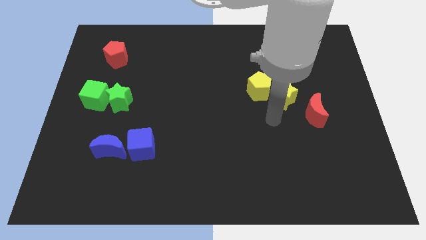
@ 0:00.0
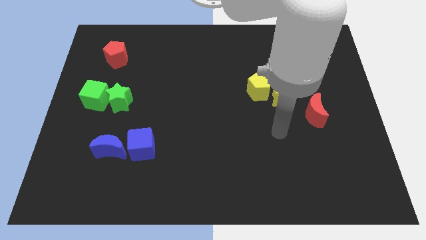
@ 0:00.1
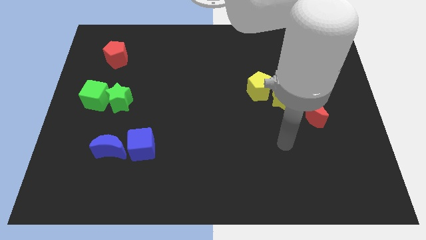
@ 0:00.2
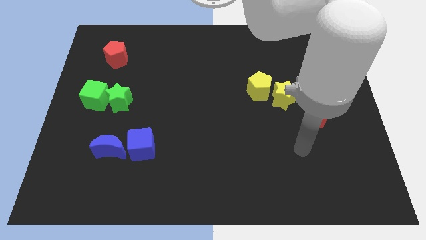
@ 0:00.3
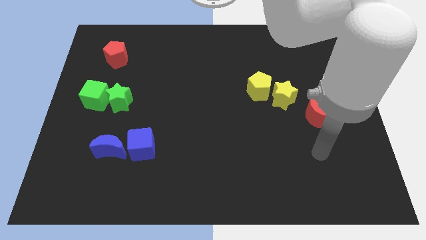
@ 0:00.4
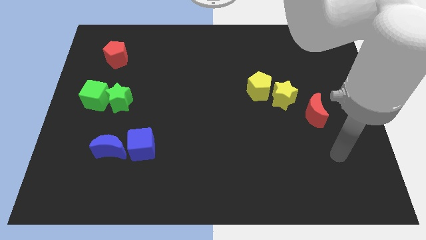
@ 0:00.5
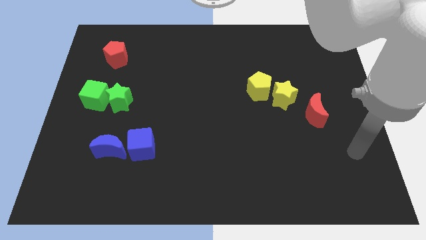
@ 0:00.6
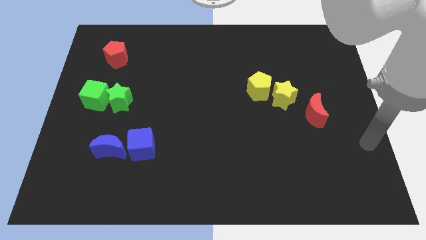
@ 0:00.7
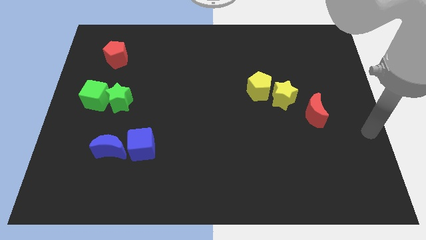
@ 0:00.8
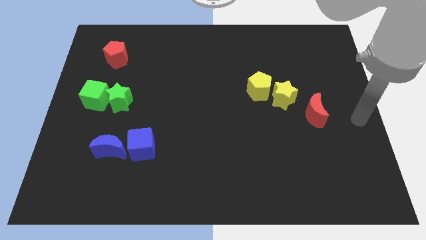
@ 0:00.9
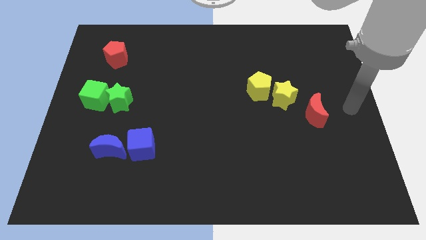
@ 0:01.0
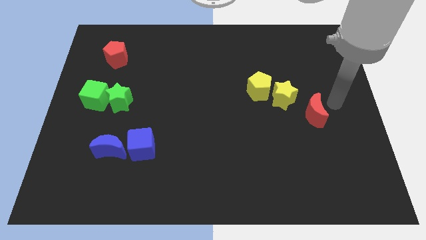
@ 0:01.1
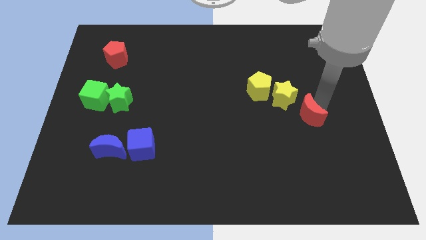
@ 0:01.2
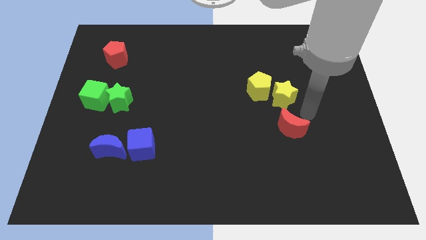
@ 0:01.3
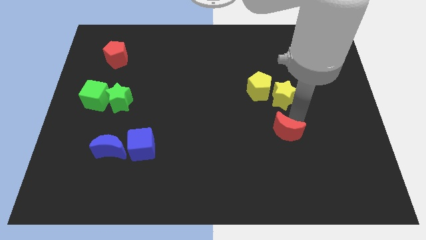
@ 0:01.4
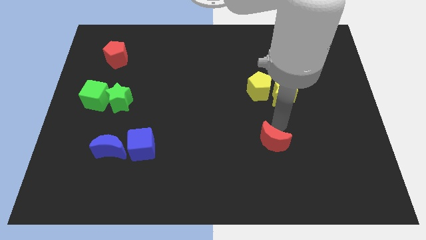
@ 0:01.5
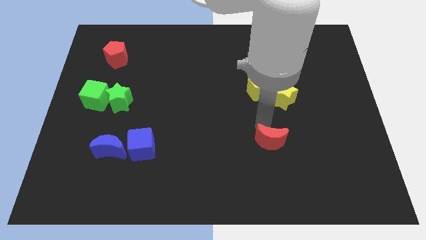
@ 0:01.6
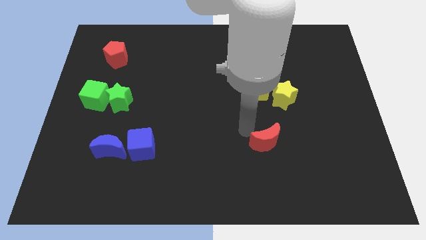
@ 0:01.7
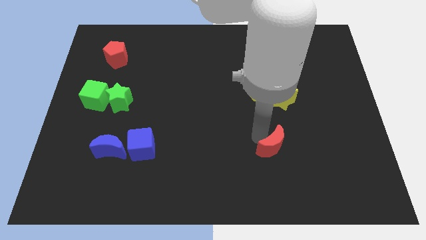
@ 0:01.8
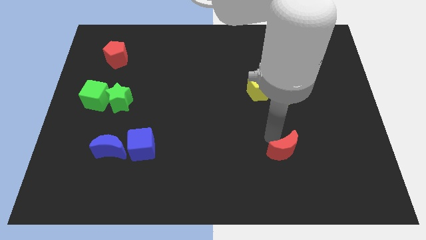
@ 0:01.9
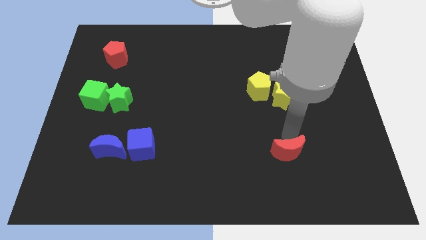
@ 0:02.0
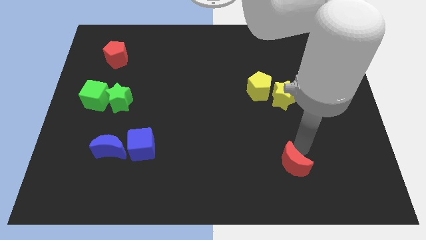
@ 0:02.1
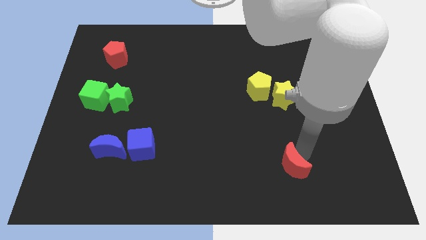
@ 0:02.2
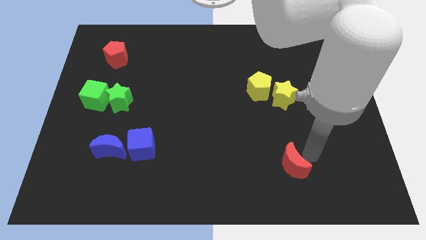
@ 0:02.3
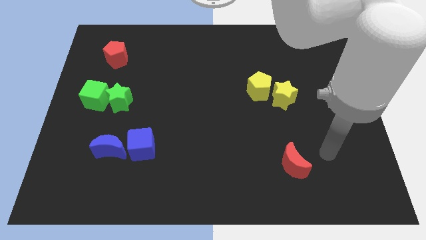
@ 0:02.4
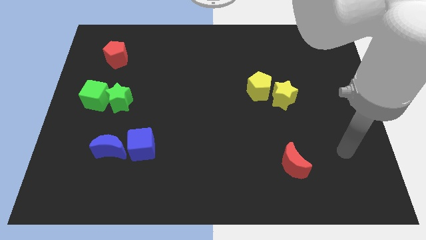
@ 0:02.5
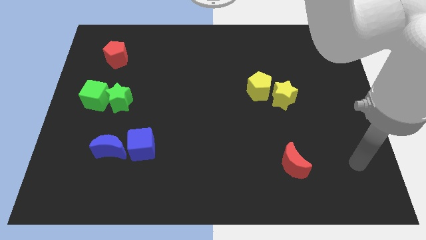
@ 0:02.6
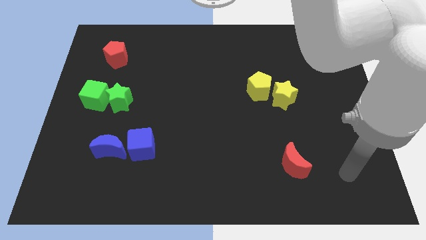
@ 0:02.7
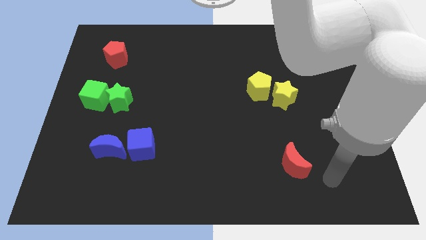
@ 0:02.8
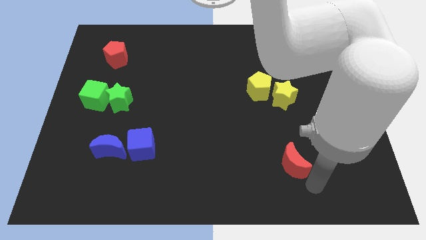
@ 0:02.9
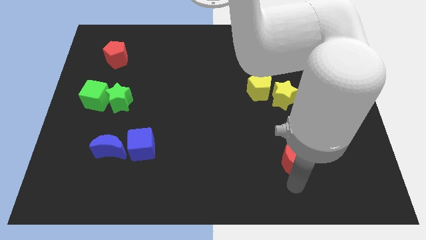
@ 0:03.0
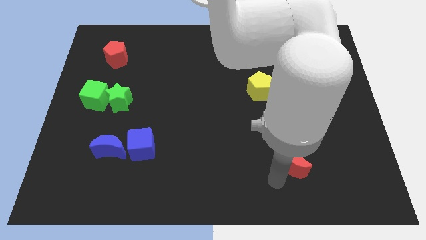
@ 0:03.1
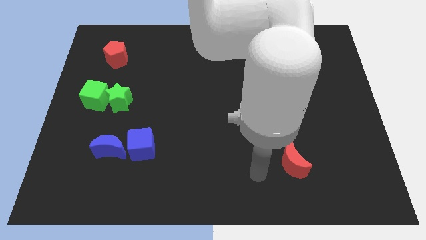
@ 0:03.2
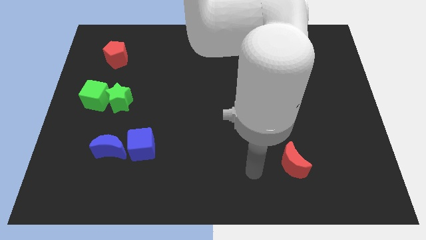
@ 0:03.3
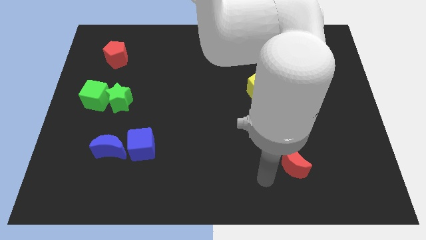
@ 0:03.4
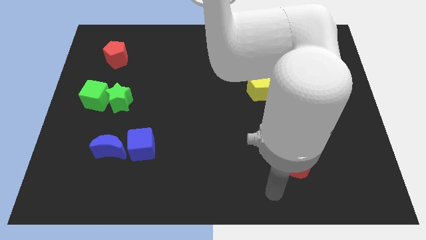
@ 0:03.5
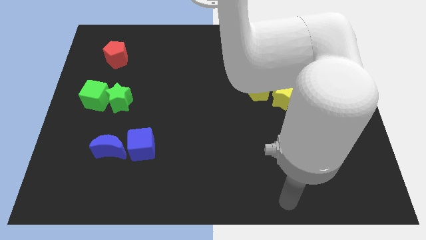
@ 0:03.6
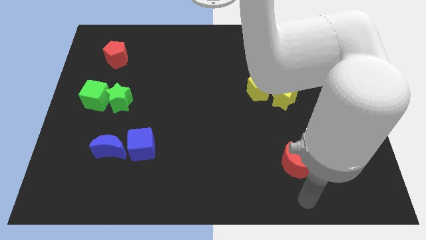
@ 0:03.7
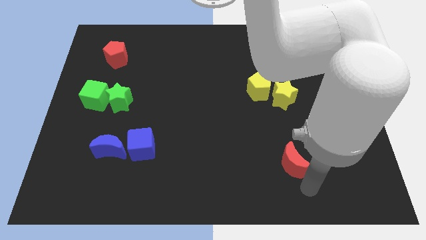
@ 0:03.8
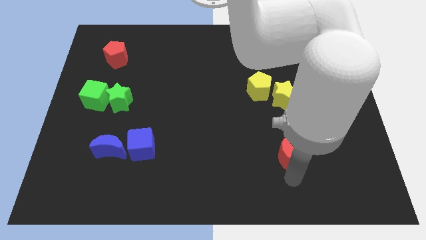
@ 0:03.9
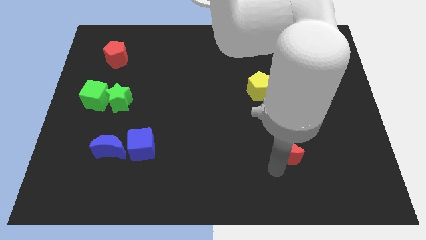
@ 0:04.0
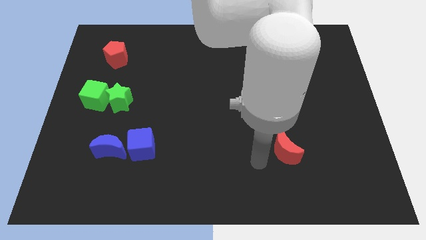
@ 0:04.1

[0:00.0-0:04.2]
place the red moon below the yellow star

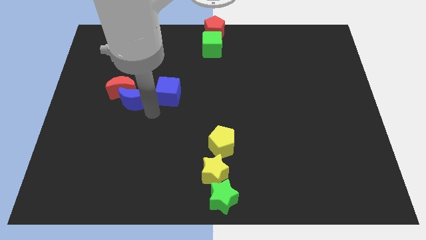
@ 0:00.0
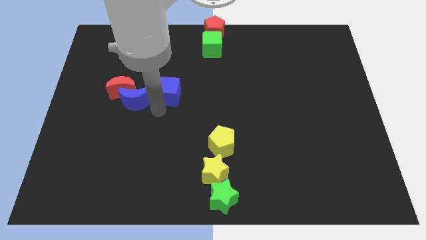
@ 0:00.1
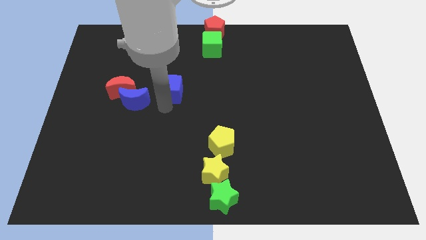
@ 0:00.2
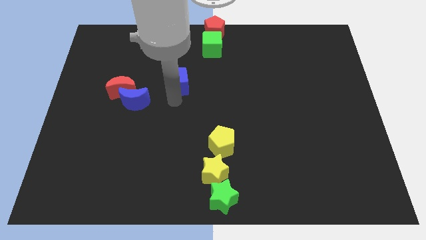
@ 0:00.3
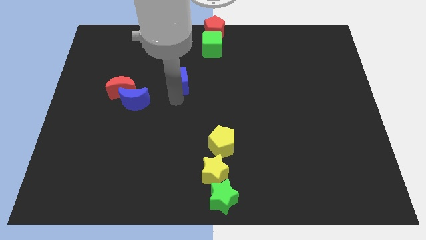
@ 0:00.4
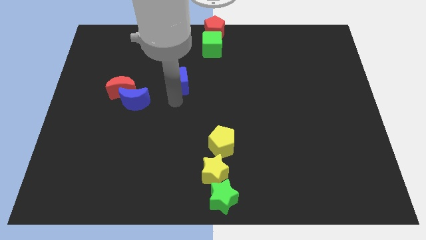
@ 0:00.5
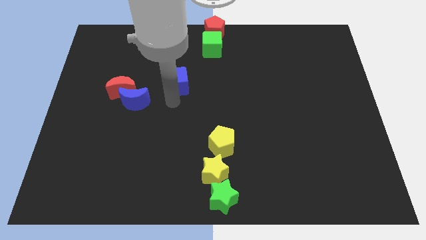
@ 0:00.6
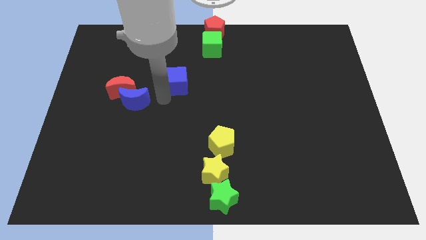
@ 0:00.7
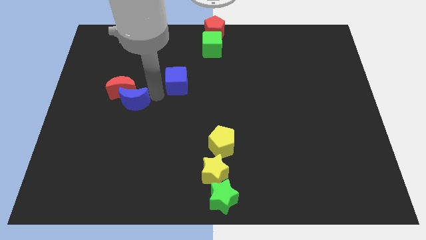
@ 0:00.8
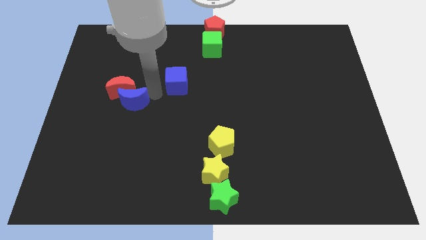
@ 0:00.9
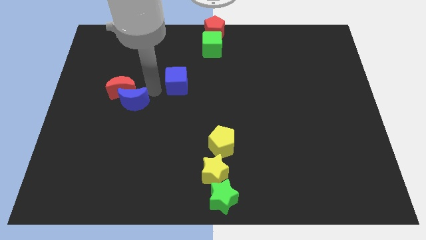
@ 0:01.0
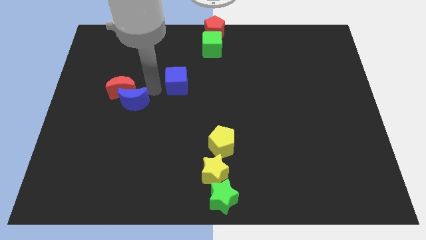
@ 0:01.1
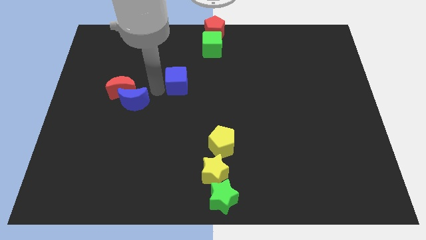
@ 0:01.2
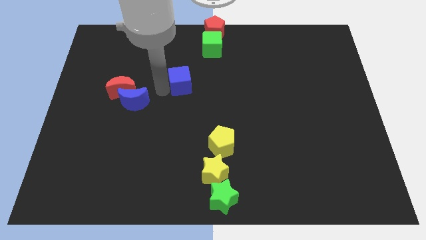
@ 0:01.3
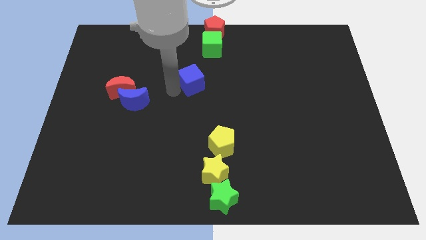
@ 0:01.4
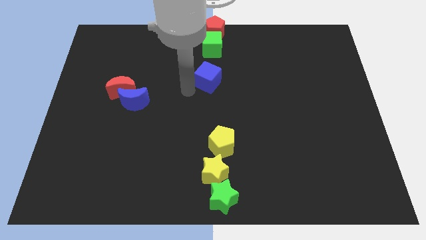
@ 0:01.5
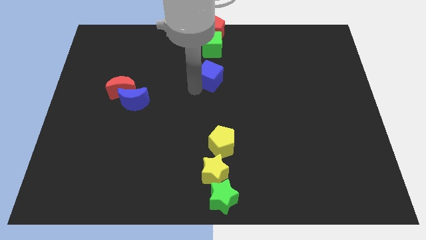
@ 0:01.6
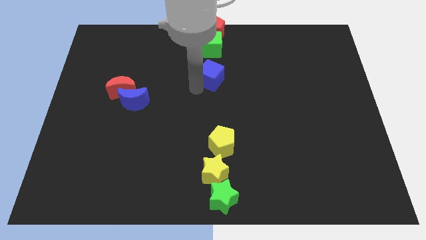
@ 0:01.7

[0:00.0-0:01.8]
place the blue cube below the green cube

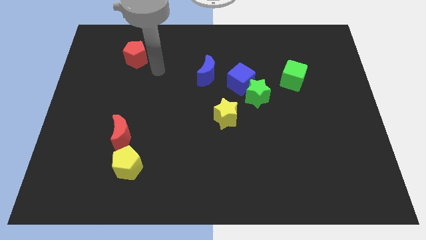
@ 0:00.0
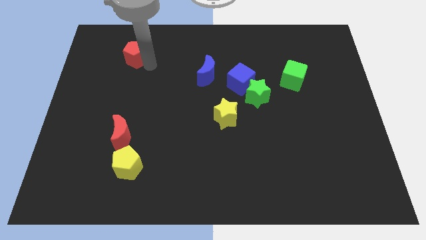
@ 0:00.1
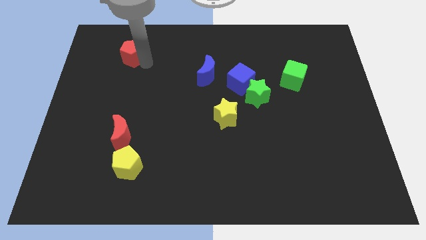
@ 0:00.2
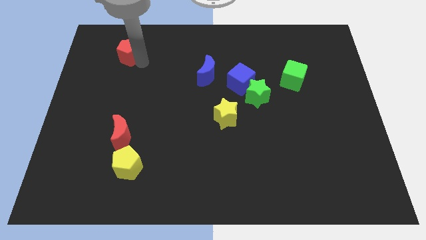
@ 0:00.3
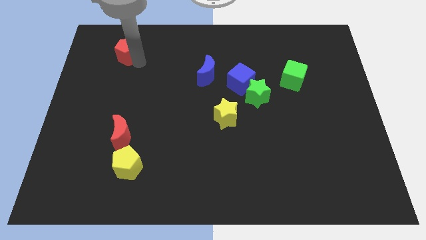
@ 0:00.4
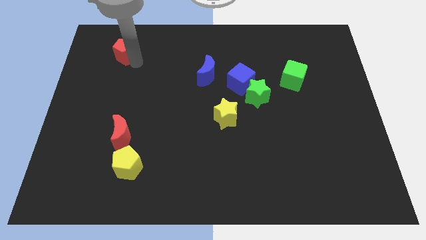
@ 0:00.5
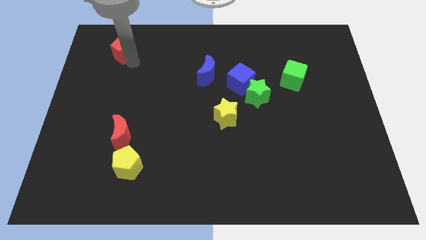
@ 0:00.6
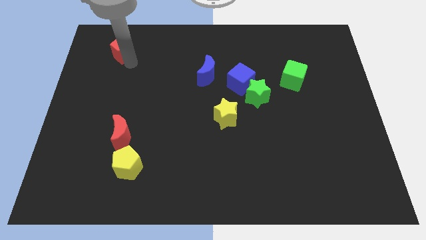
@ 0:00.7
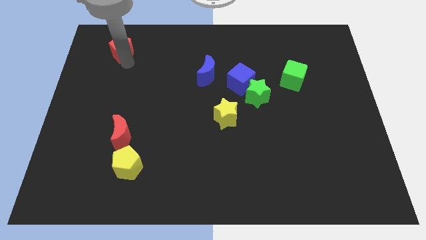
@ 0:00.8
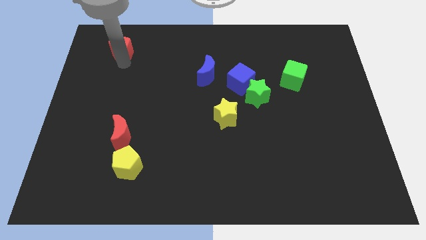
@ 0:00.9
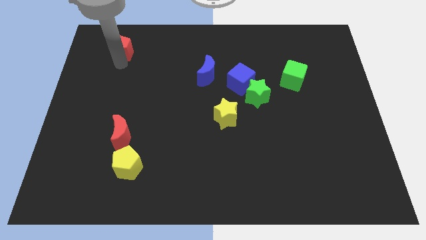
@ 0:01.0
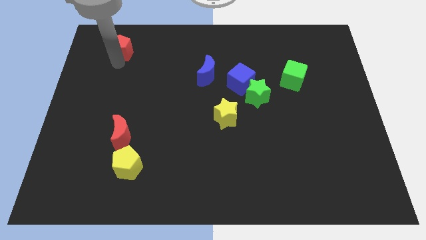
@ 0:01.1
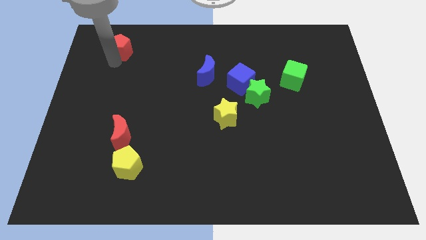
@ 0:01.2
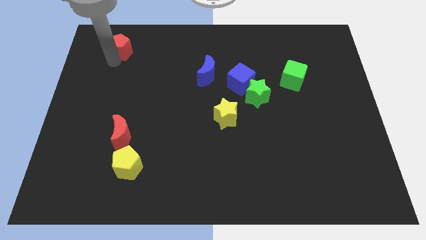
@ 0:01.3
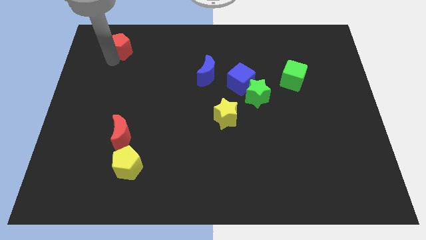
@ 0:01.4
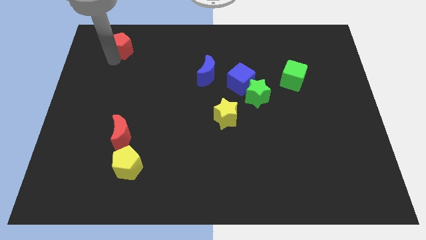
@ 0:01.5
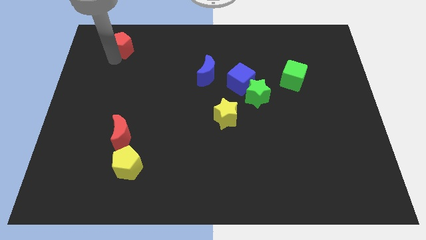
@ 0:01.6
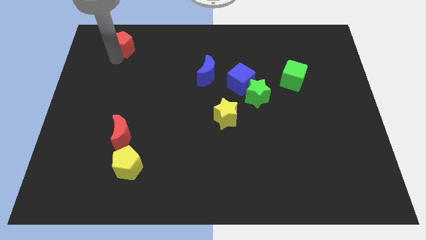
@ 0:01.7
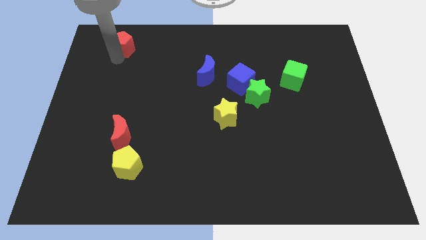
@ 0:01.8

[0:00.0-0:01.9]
push the red pentagon upward

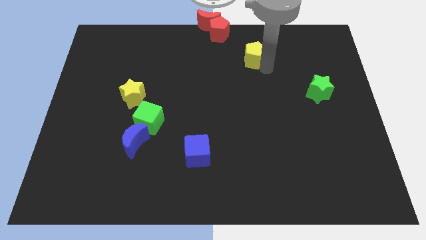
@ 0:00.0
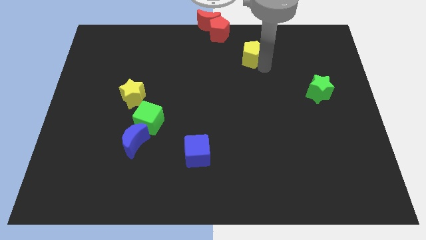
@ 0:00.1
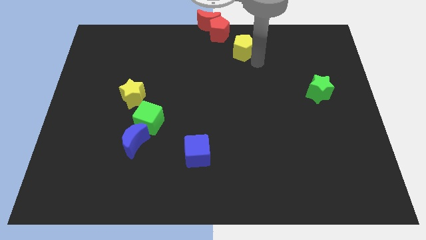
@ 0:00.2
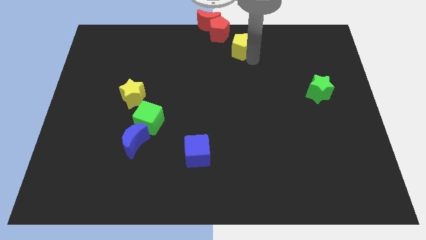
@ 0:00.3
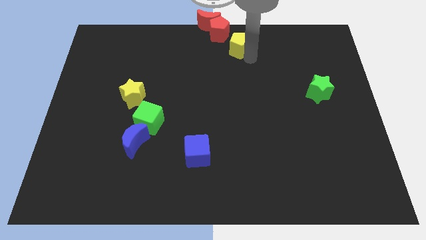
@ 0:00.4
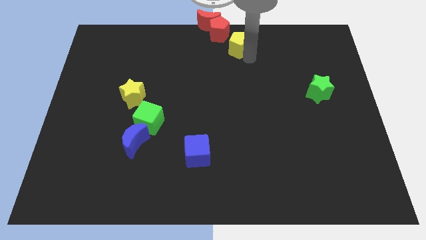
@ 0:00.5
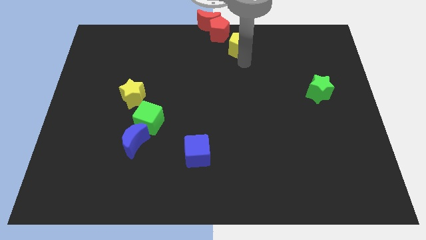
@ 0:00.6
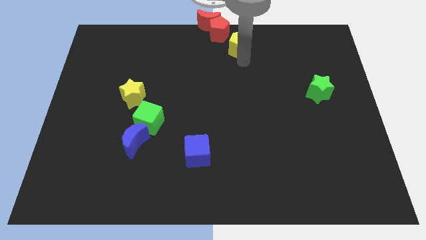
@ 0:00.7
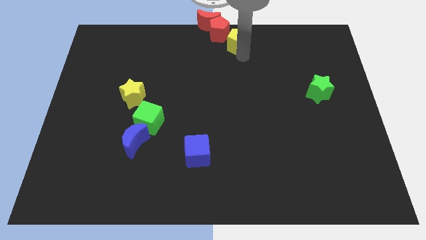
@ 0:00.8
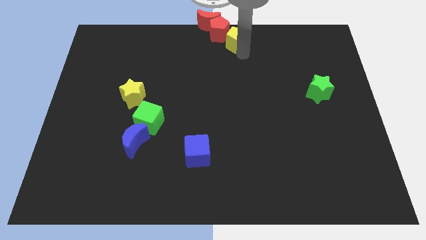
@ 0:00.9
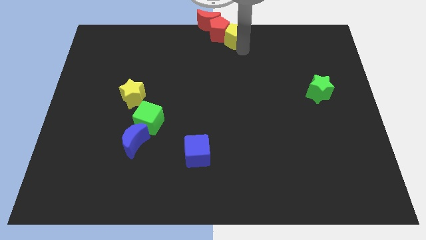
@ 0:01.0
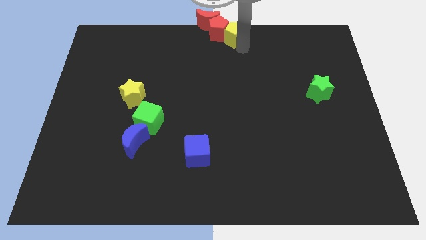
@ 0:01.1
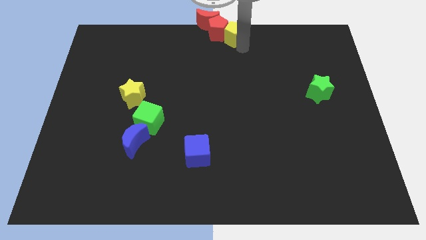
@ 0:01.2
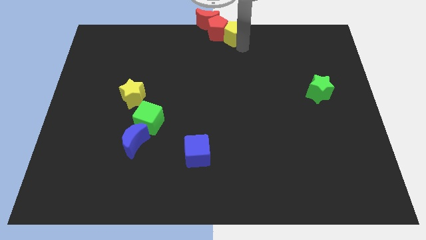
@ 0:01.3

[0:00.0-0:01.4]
move yellow pentagon right below the red pentagon
